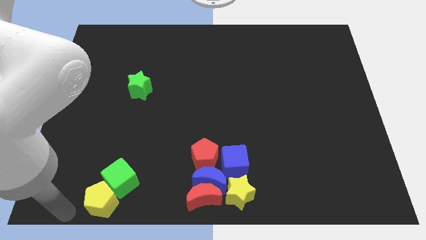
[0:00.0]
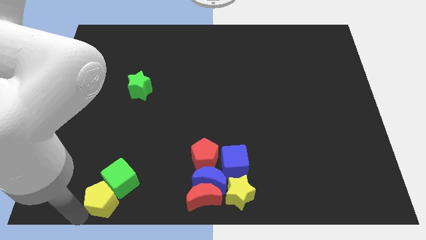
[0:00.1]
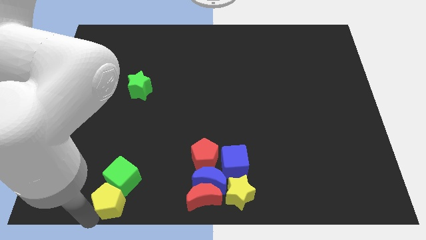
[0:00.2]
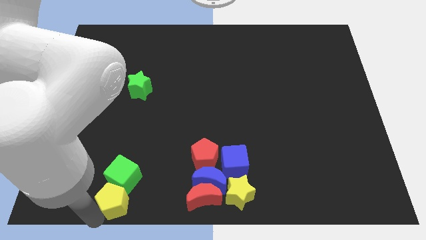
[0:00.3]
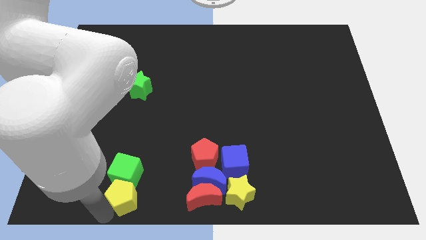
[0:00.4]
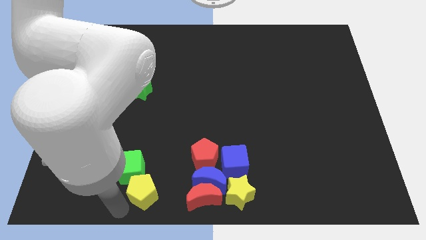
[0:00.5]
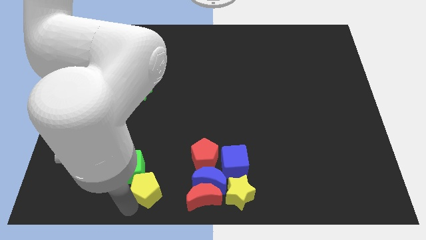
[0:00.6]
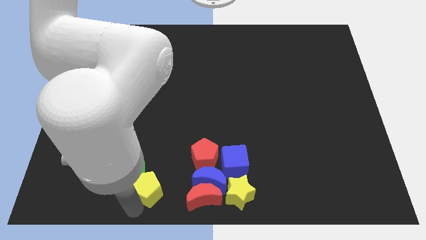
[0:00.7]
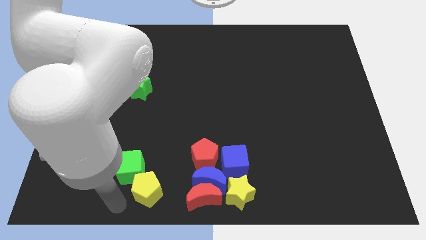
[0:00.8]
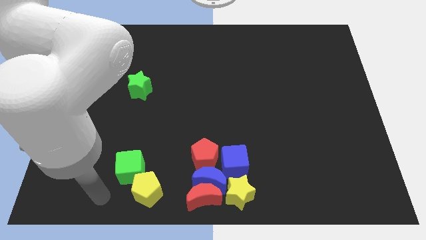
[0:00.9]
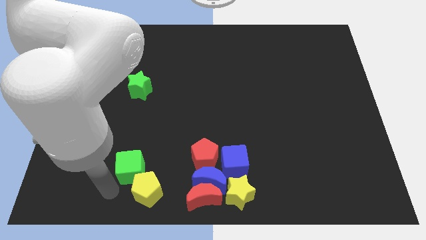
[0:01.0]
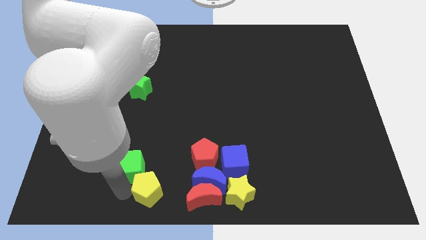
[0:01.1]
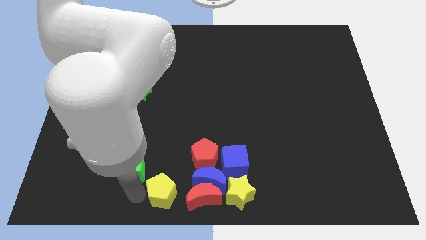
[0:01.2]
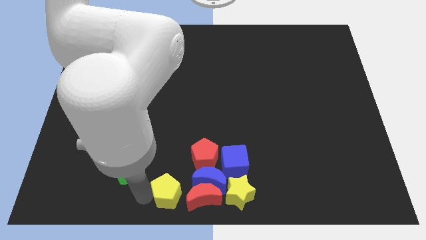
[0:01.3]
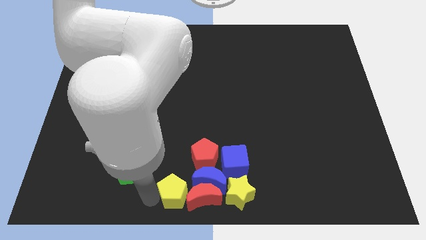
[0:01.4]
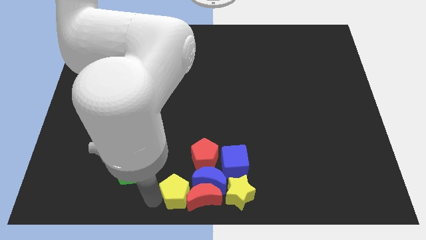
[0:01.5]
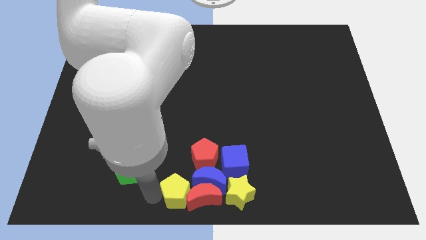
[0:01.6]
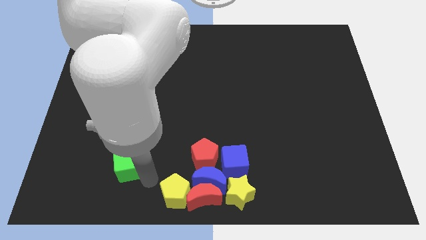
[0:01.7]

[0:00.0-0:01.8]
move the yellow pentagon left to the red crescent

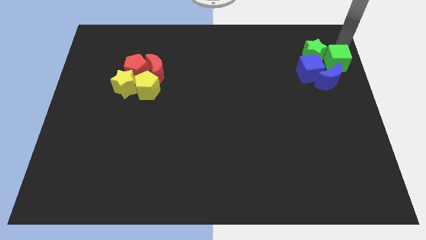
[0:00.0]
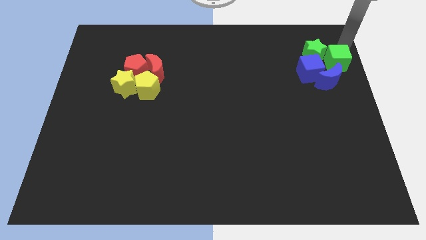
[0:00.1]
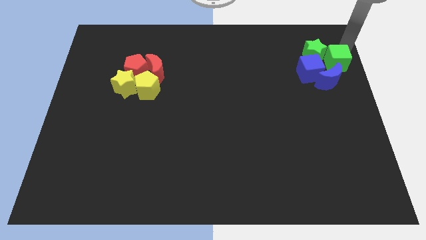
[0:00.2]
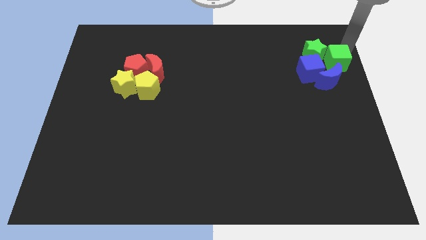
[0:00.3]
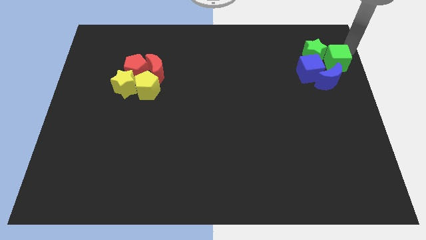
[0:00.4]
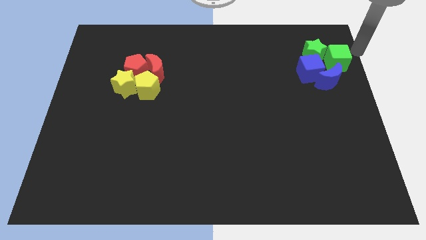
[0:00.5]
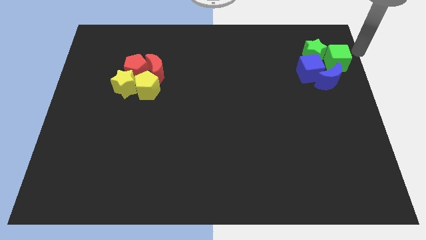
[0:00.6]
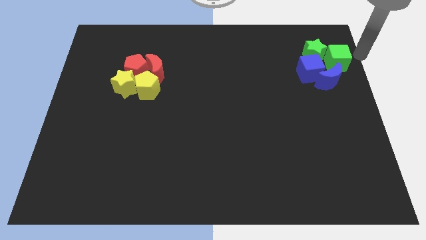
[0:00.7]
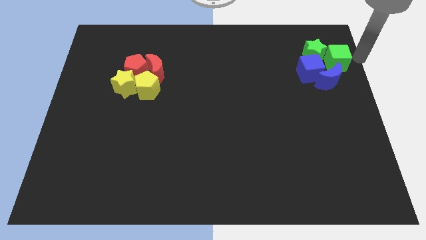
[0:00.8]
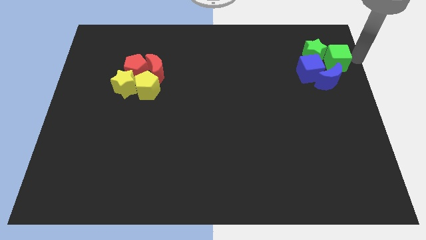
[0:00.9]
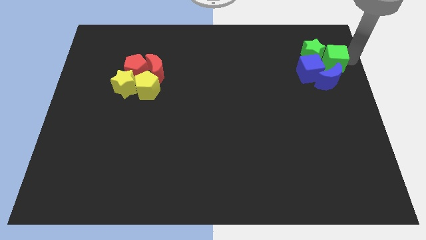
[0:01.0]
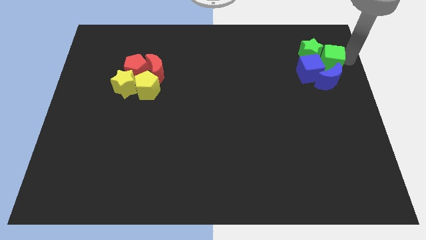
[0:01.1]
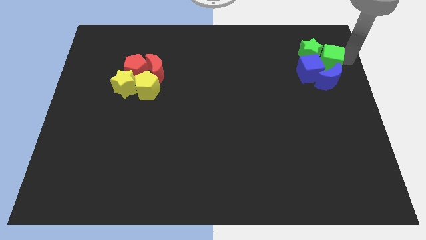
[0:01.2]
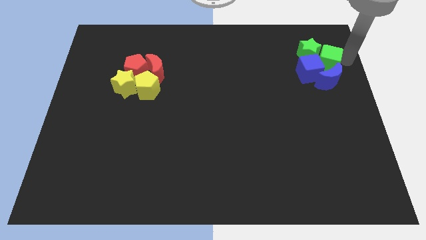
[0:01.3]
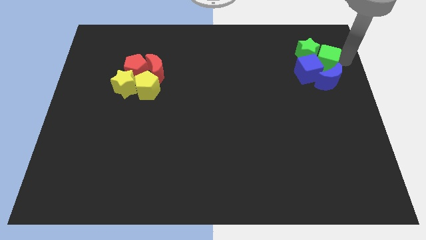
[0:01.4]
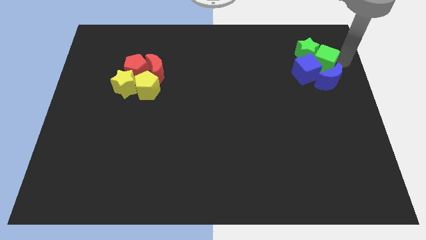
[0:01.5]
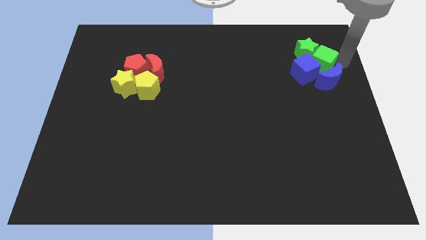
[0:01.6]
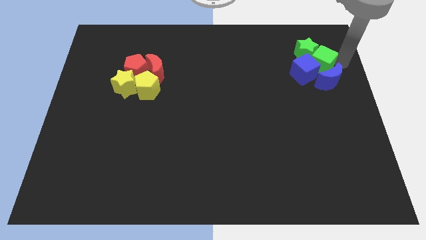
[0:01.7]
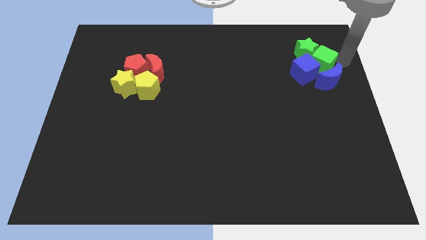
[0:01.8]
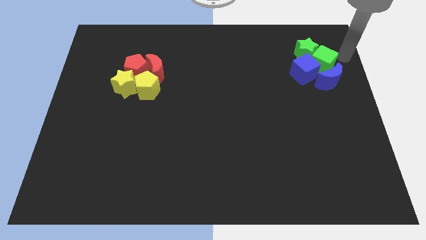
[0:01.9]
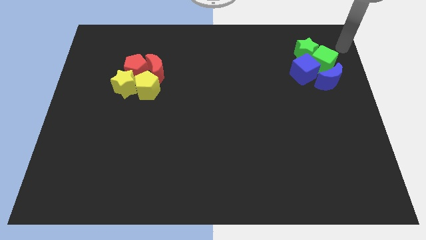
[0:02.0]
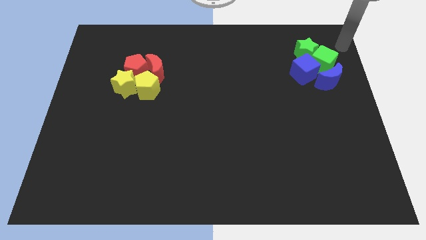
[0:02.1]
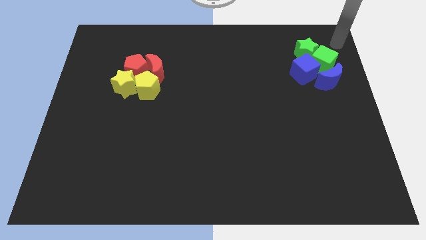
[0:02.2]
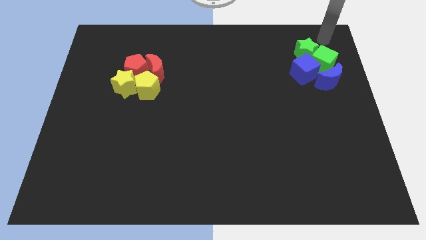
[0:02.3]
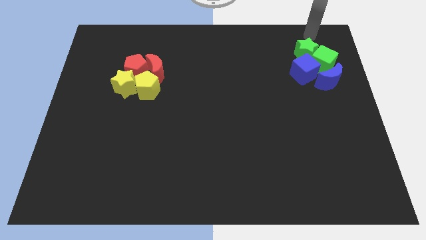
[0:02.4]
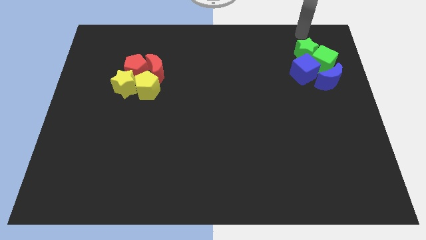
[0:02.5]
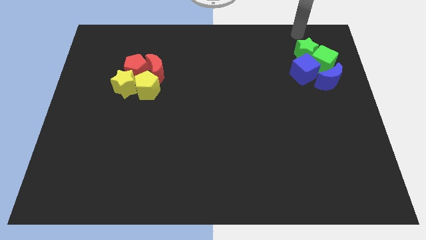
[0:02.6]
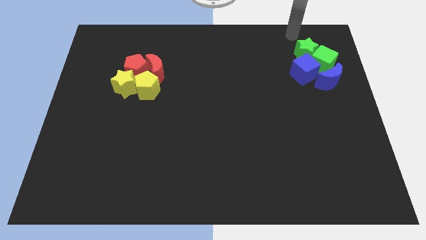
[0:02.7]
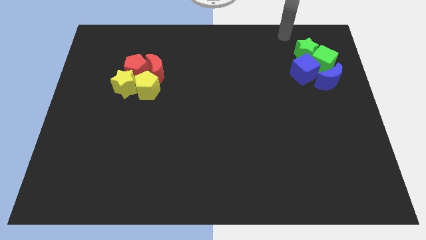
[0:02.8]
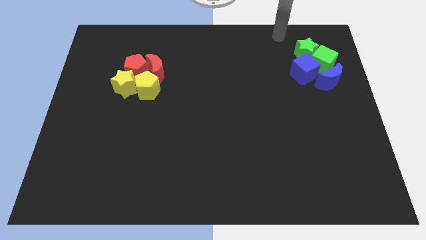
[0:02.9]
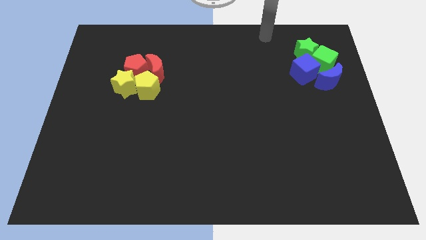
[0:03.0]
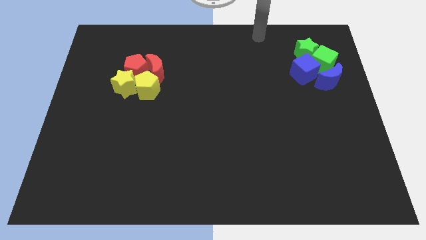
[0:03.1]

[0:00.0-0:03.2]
push the green blocks and blue cube towards the left side of the board

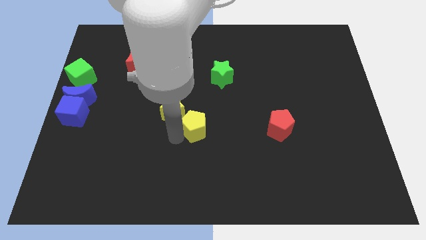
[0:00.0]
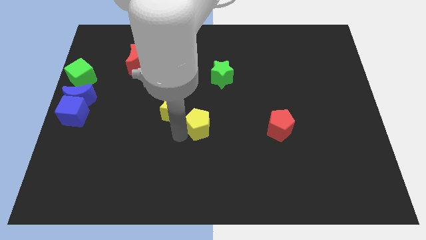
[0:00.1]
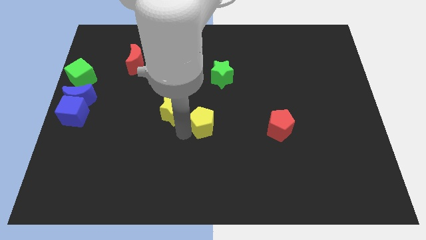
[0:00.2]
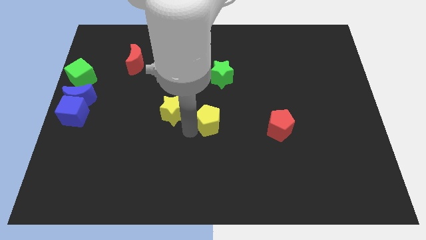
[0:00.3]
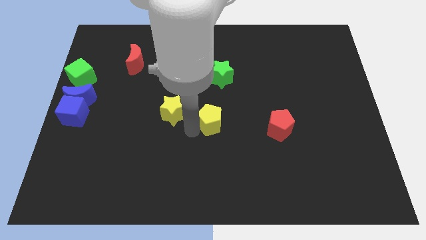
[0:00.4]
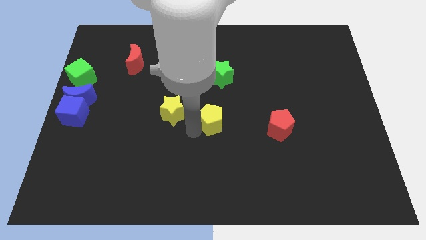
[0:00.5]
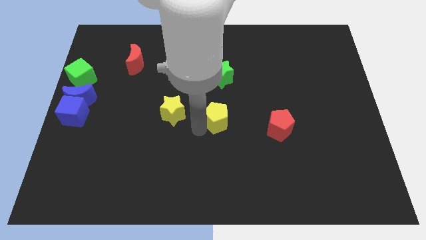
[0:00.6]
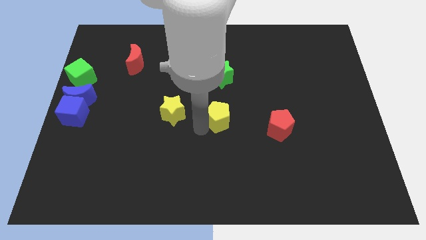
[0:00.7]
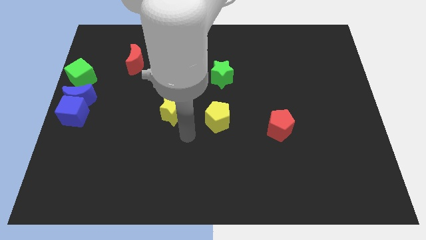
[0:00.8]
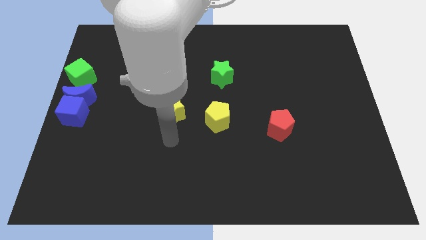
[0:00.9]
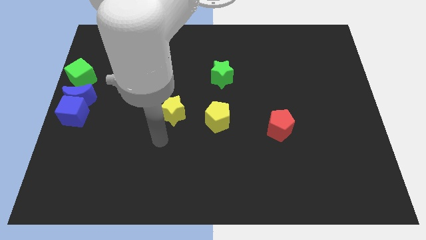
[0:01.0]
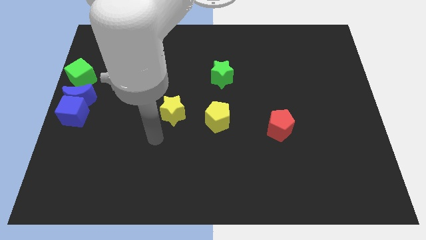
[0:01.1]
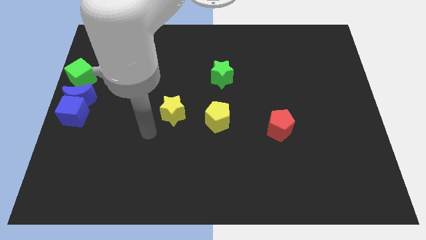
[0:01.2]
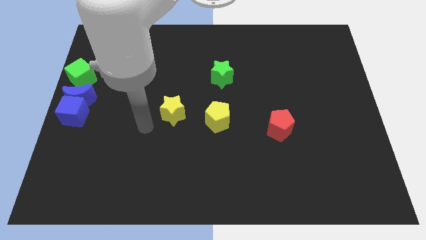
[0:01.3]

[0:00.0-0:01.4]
place the yellow pentagon in between the yellow star and red pentagon

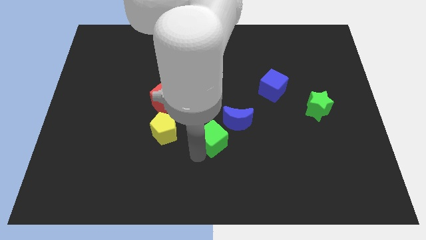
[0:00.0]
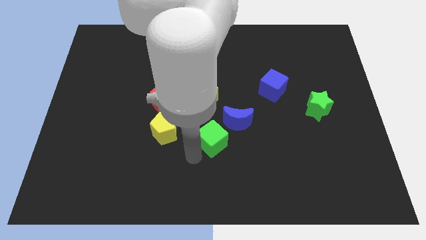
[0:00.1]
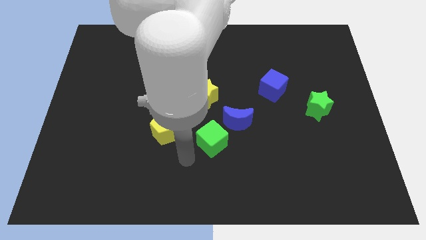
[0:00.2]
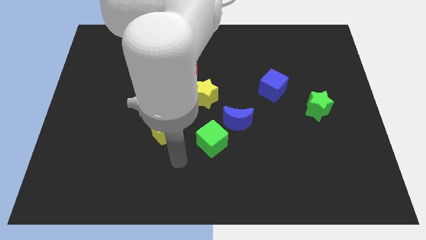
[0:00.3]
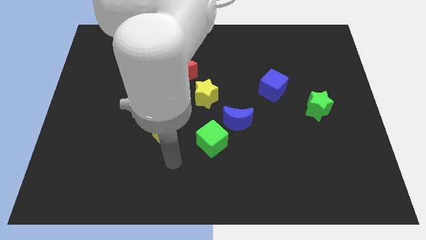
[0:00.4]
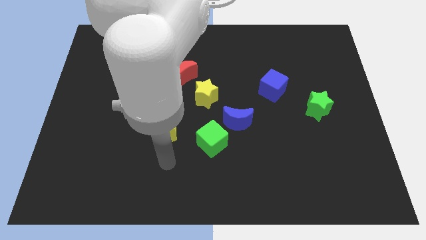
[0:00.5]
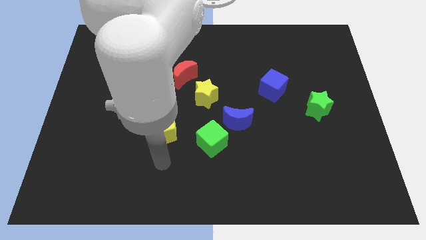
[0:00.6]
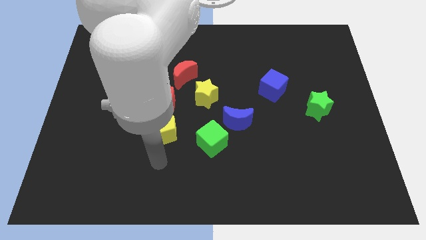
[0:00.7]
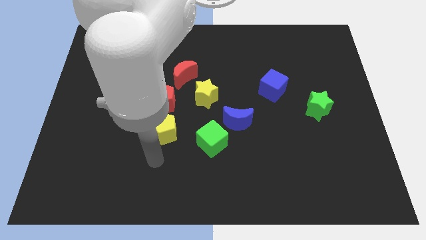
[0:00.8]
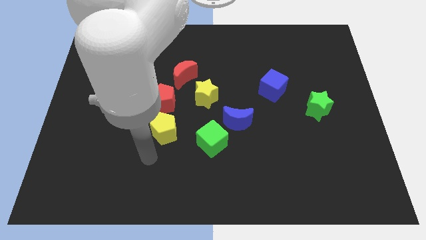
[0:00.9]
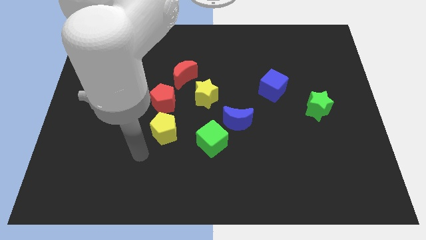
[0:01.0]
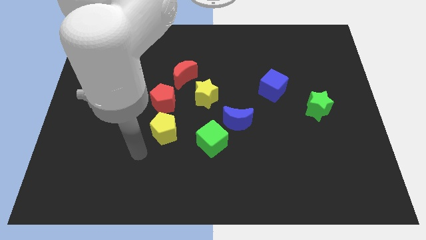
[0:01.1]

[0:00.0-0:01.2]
move arm to the left of yellow pentagon

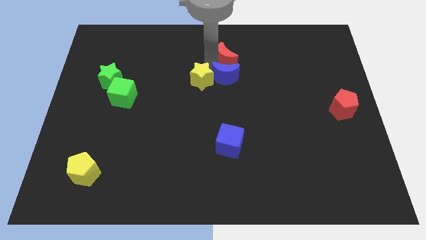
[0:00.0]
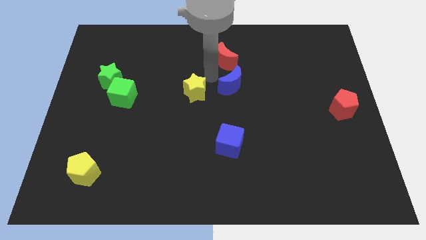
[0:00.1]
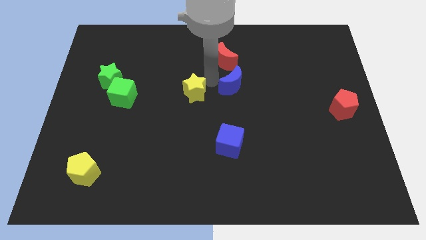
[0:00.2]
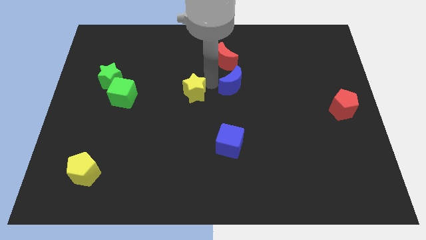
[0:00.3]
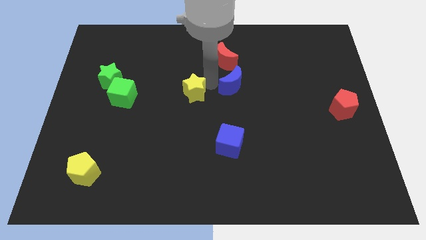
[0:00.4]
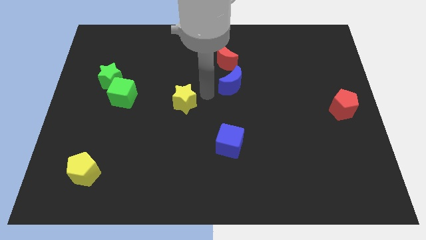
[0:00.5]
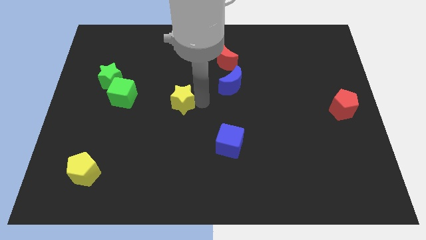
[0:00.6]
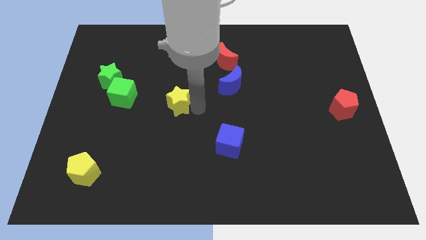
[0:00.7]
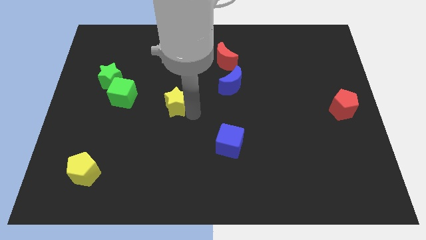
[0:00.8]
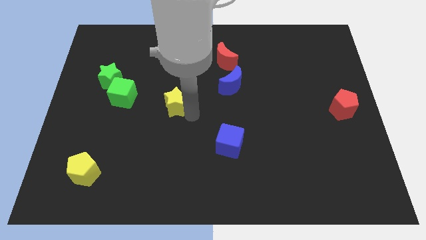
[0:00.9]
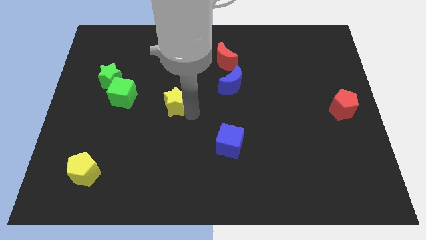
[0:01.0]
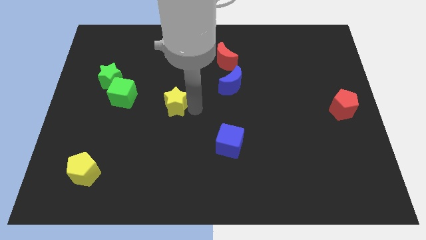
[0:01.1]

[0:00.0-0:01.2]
separate the yellow star from crescents

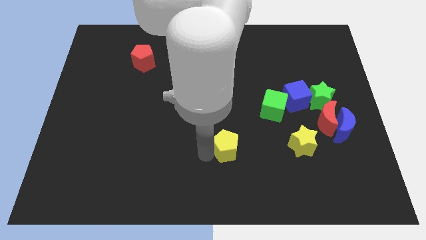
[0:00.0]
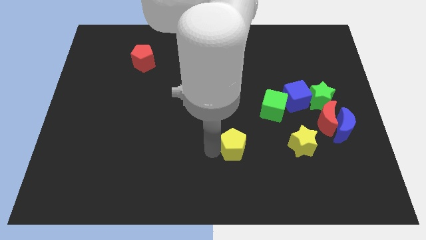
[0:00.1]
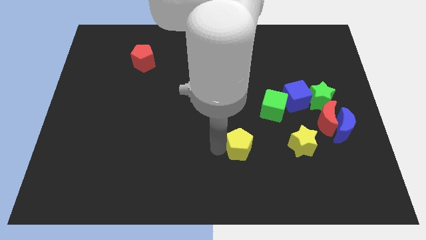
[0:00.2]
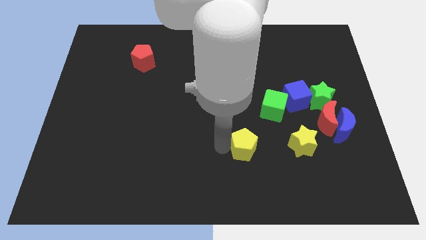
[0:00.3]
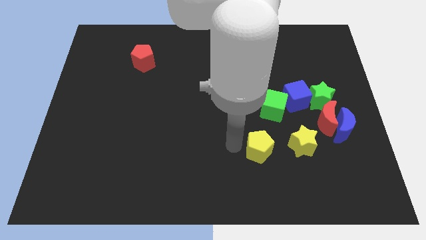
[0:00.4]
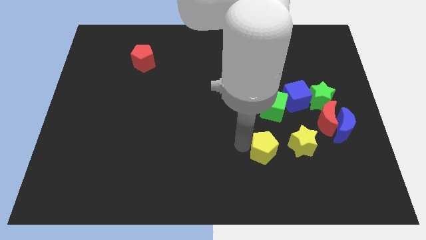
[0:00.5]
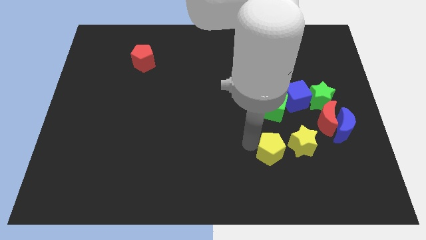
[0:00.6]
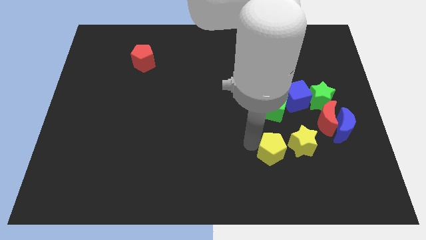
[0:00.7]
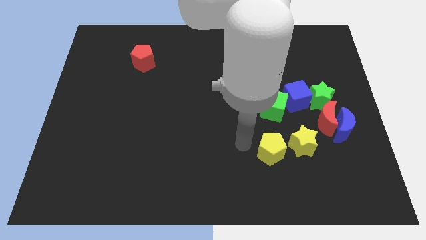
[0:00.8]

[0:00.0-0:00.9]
push the yellow pentagon into the group of blocks
